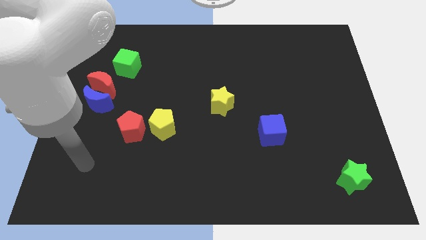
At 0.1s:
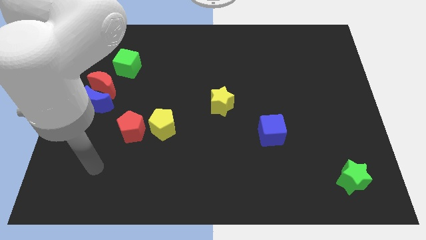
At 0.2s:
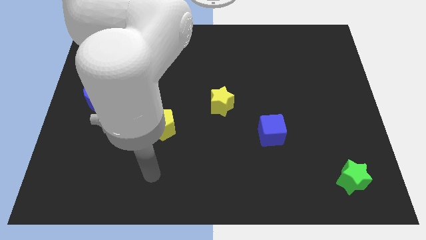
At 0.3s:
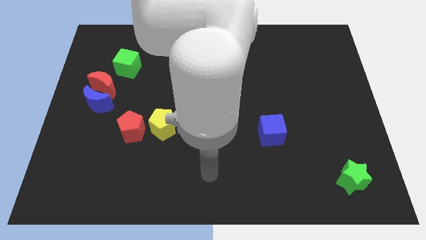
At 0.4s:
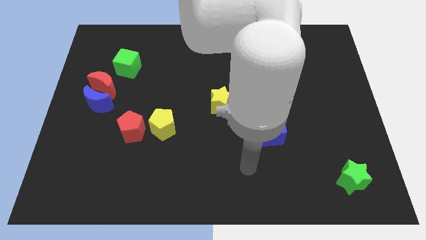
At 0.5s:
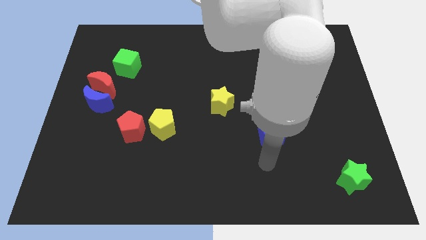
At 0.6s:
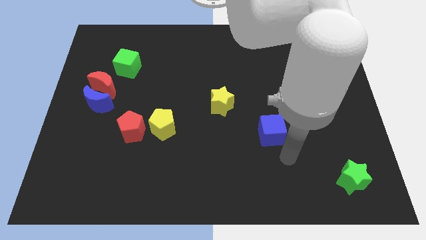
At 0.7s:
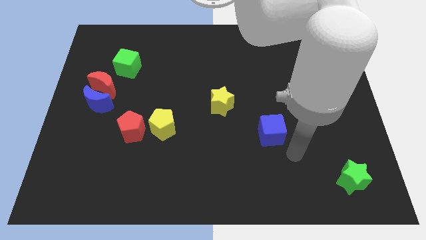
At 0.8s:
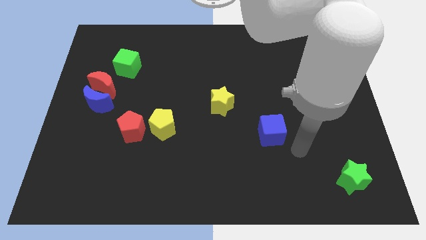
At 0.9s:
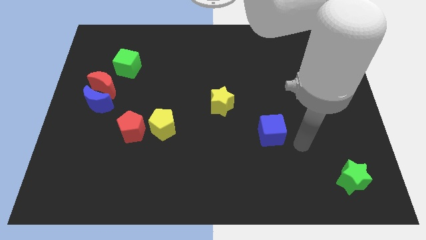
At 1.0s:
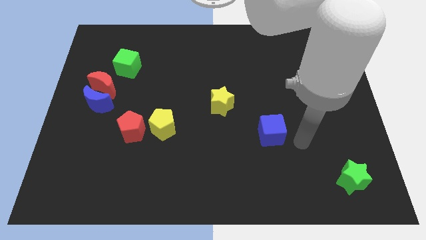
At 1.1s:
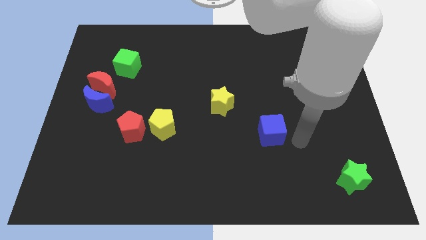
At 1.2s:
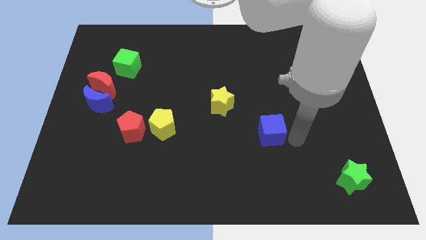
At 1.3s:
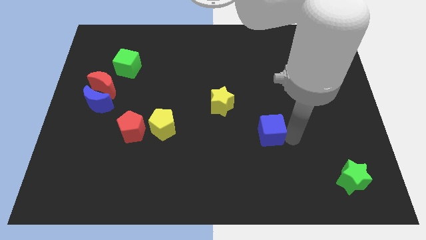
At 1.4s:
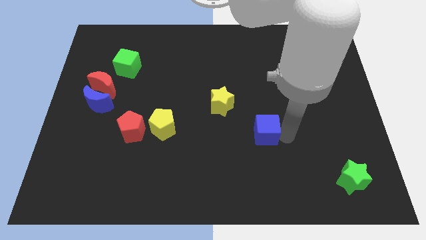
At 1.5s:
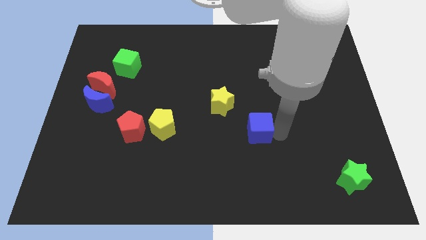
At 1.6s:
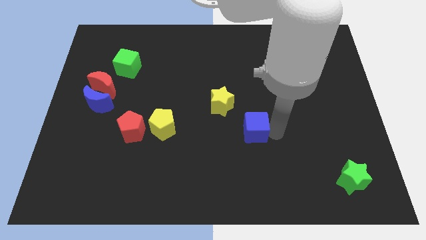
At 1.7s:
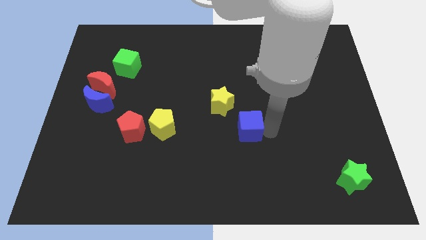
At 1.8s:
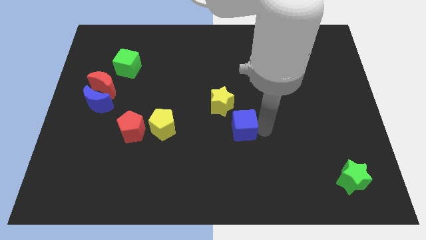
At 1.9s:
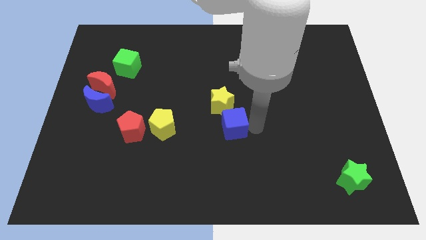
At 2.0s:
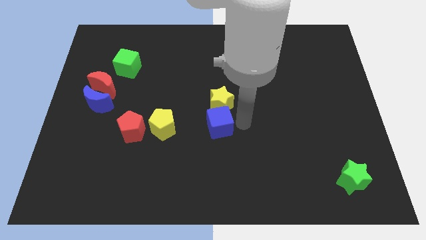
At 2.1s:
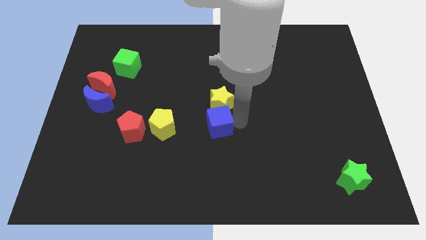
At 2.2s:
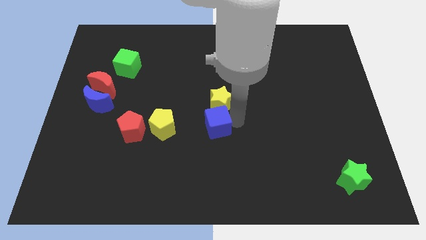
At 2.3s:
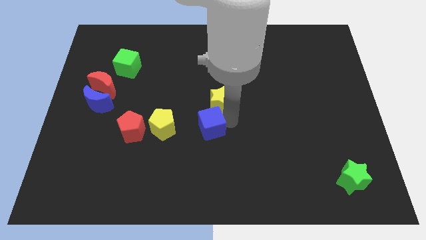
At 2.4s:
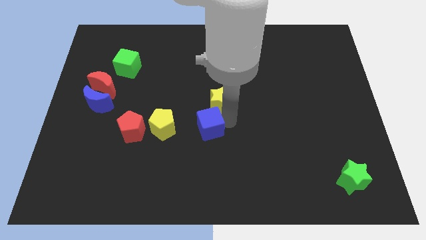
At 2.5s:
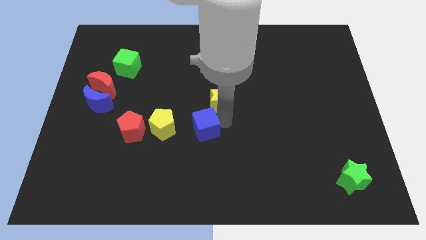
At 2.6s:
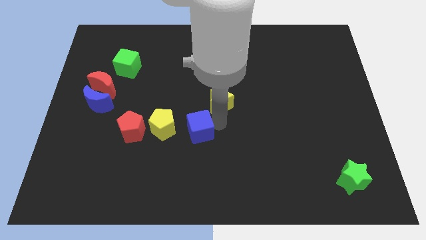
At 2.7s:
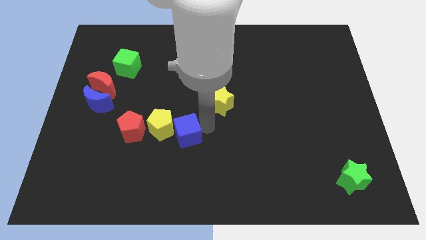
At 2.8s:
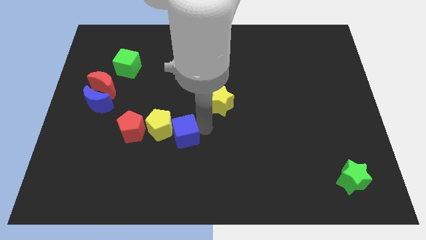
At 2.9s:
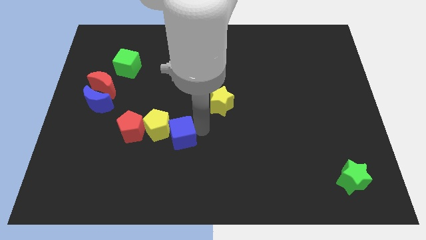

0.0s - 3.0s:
slide the blue cube towards the yellow pentagon

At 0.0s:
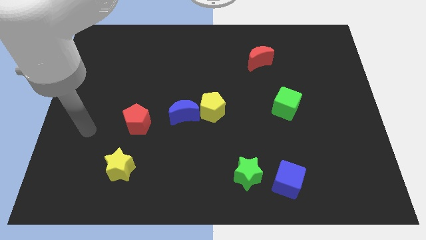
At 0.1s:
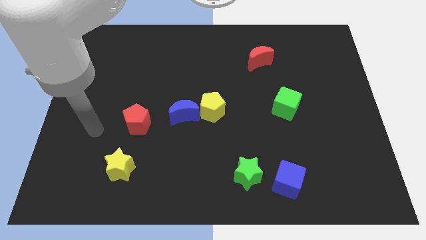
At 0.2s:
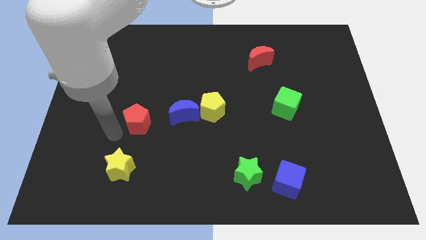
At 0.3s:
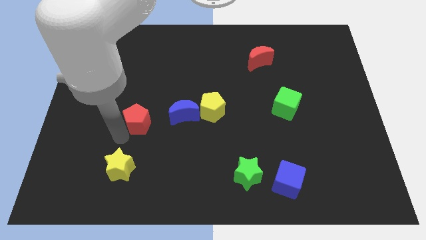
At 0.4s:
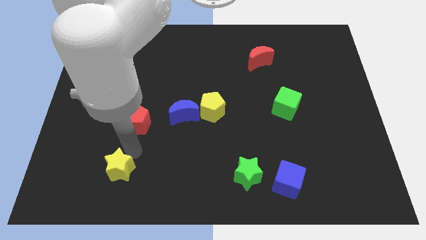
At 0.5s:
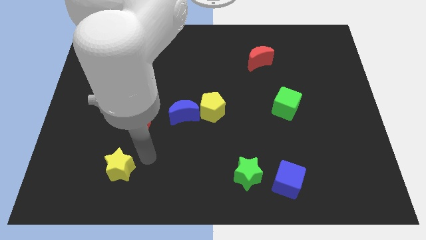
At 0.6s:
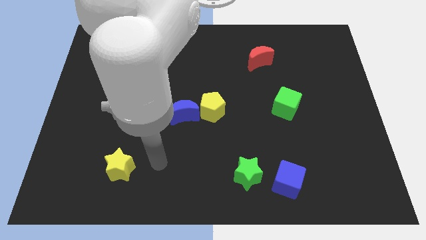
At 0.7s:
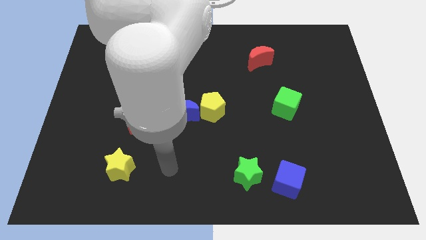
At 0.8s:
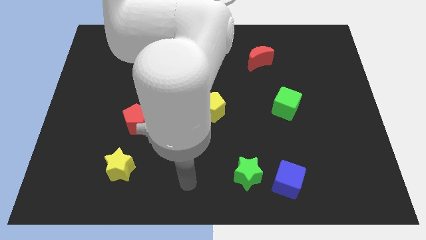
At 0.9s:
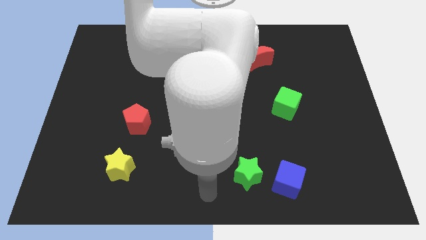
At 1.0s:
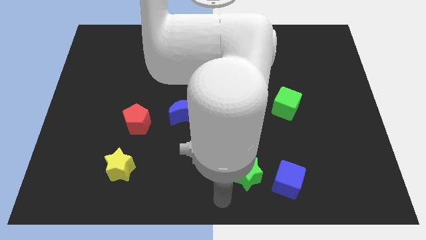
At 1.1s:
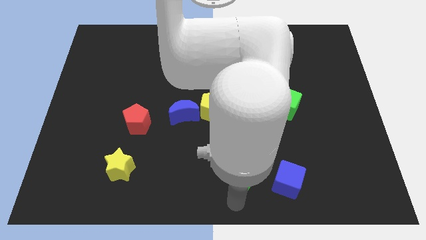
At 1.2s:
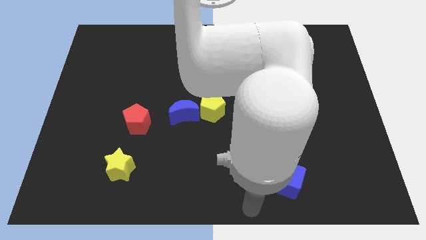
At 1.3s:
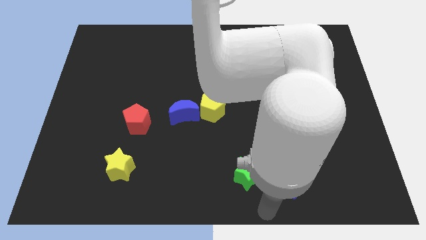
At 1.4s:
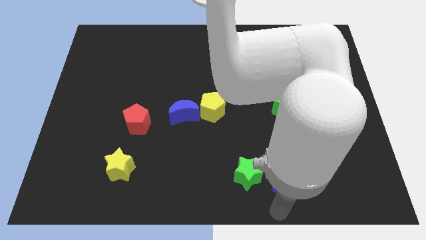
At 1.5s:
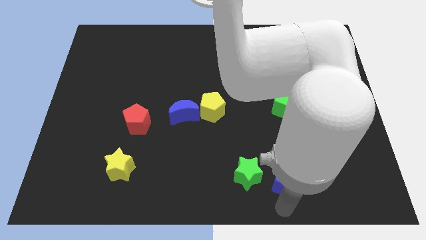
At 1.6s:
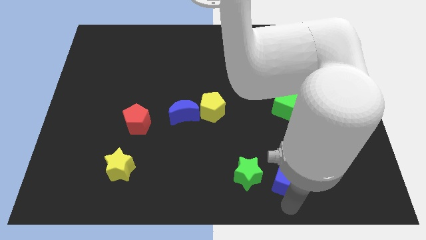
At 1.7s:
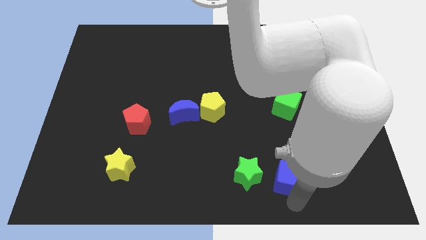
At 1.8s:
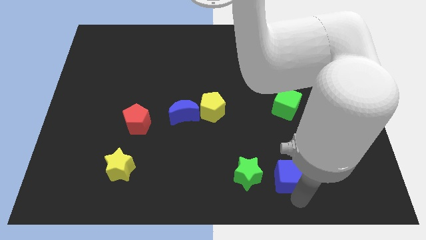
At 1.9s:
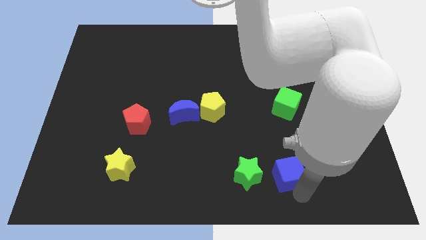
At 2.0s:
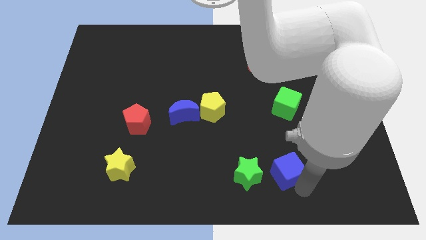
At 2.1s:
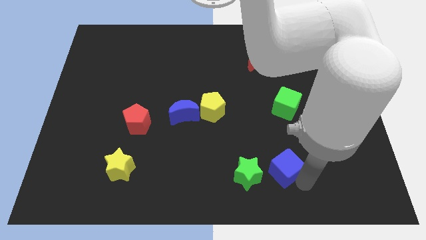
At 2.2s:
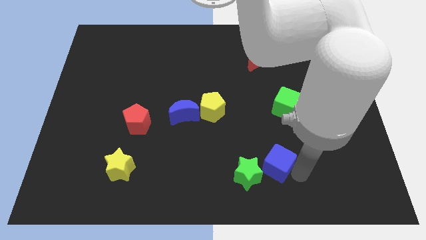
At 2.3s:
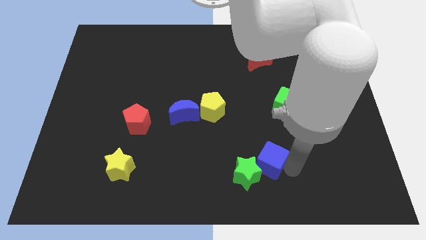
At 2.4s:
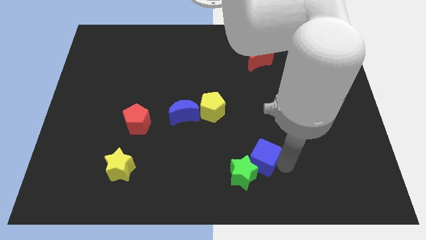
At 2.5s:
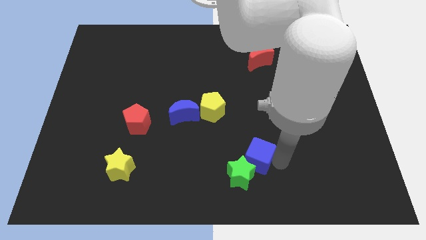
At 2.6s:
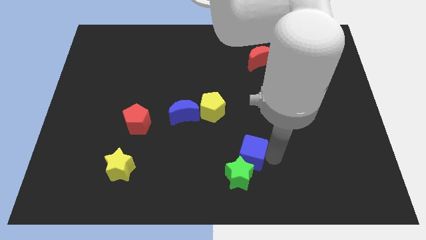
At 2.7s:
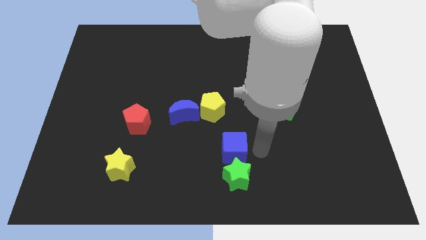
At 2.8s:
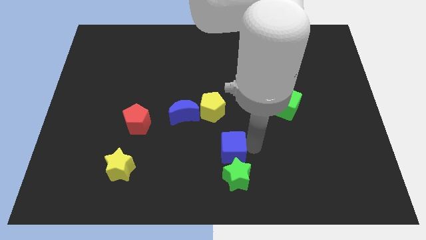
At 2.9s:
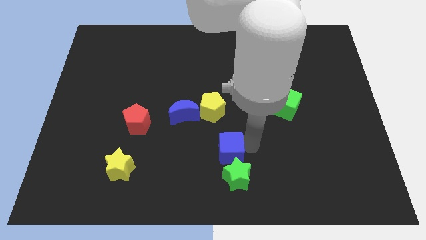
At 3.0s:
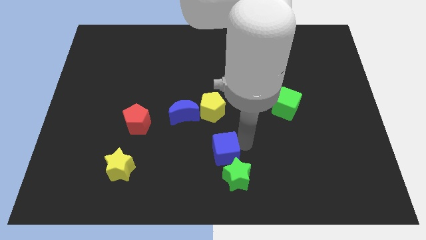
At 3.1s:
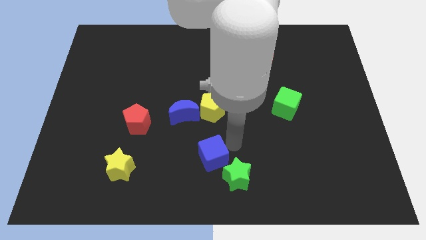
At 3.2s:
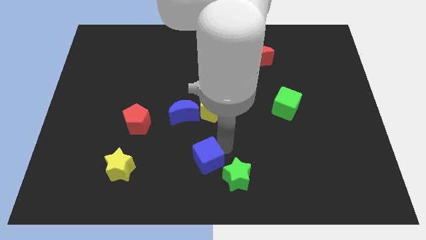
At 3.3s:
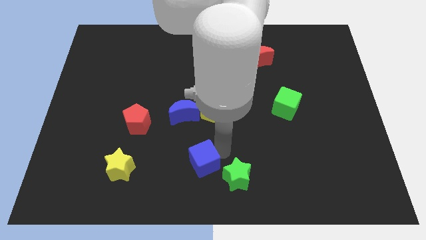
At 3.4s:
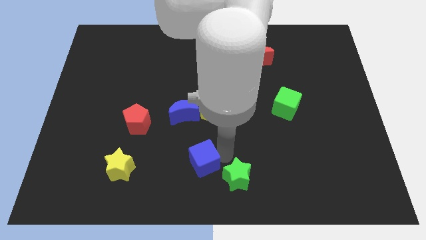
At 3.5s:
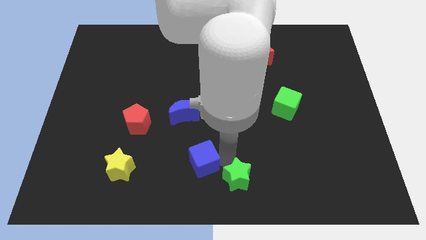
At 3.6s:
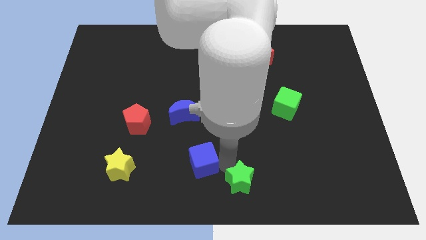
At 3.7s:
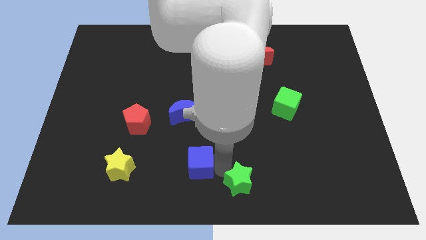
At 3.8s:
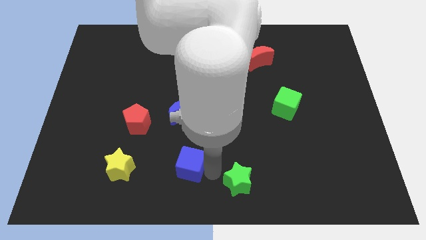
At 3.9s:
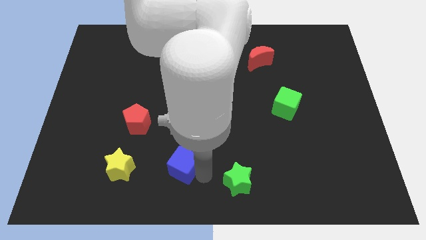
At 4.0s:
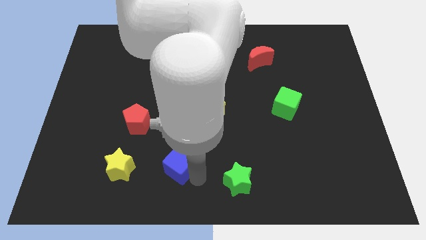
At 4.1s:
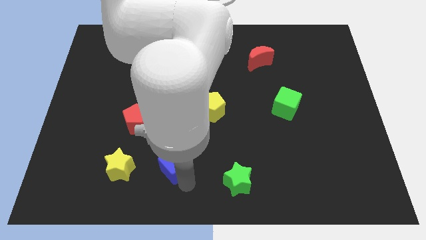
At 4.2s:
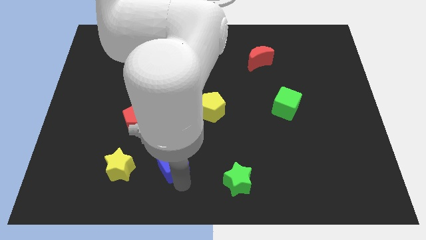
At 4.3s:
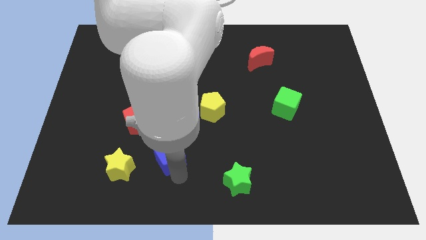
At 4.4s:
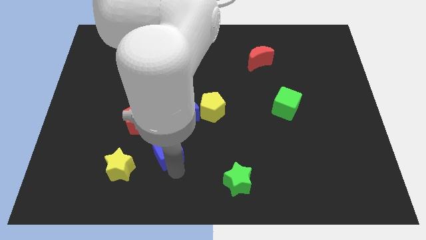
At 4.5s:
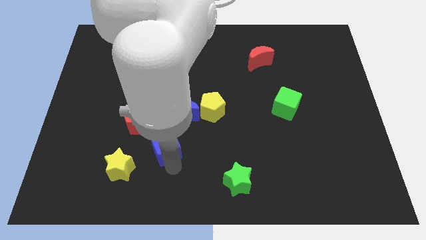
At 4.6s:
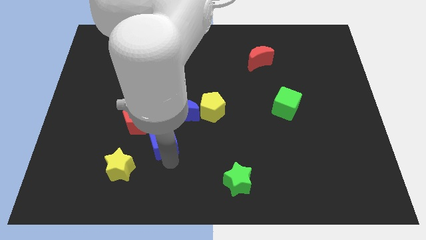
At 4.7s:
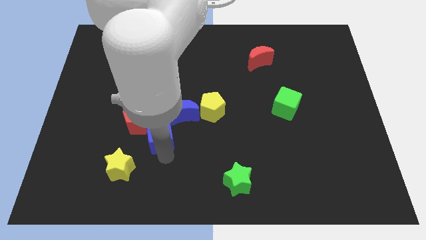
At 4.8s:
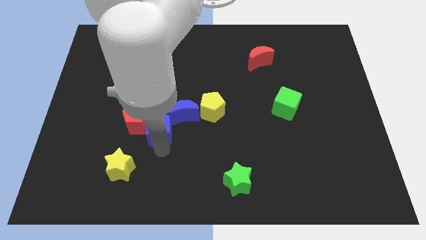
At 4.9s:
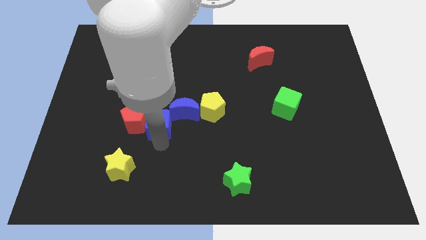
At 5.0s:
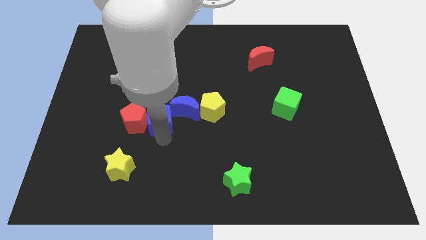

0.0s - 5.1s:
slide the blue cube towards the red pentagon
